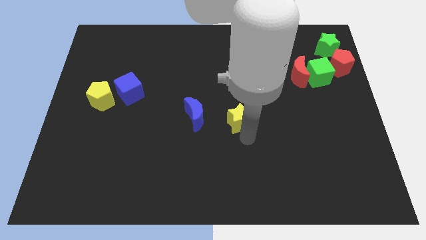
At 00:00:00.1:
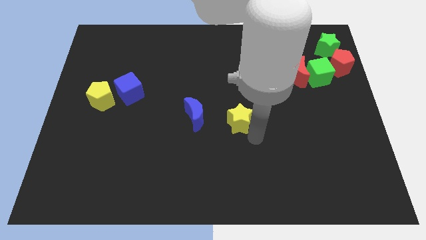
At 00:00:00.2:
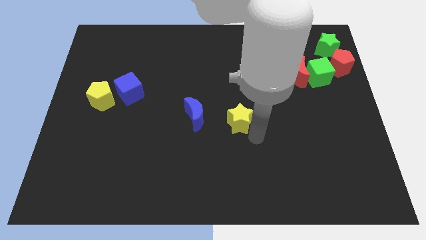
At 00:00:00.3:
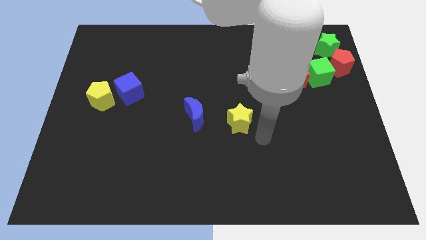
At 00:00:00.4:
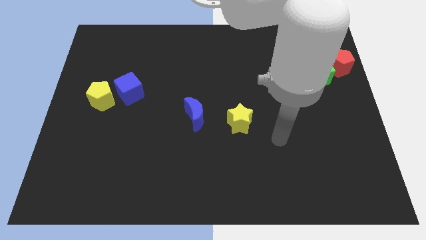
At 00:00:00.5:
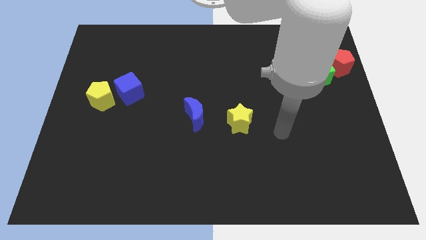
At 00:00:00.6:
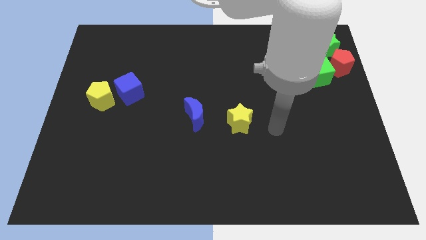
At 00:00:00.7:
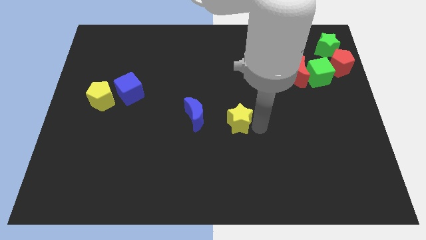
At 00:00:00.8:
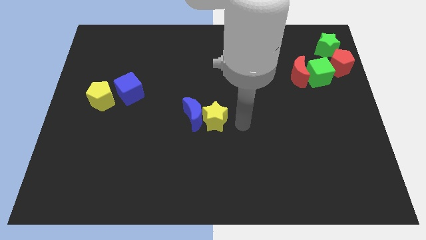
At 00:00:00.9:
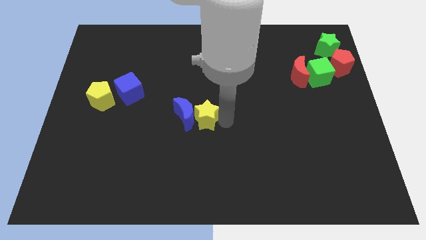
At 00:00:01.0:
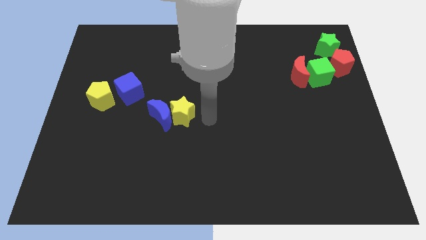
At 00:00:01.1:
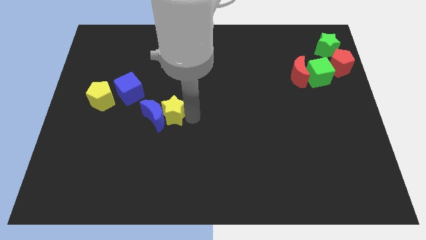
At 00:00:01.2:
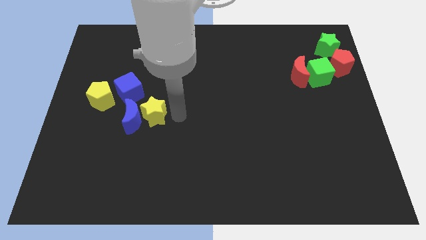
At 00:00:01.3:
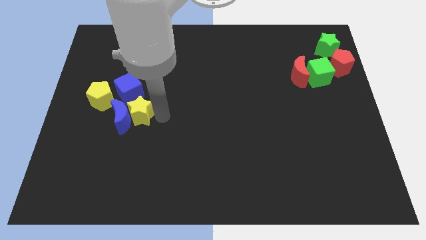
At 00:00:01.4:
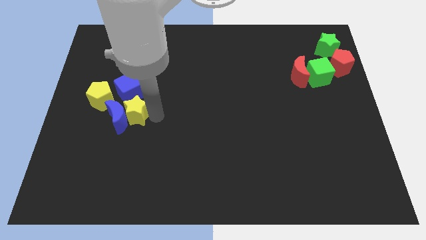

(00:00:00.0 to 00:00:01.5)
push the yellow star into the blue moon

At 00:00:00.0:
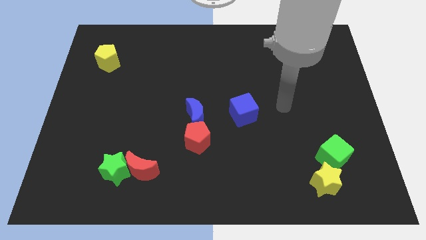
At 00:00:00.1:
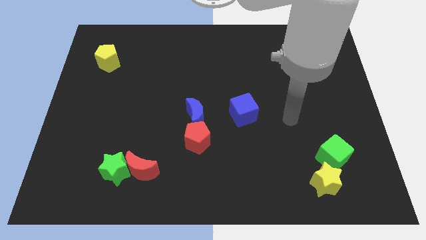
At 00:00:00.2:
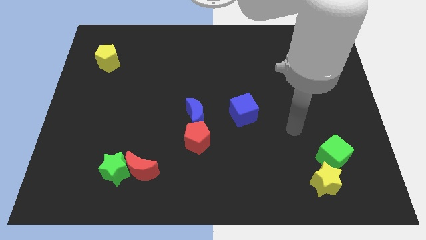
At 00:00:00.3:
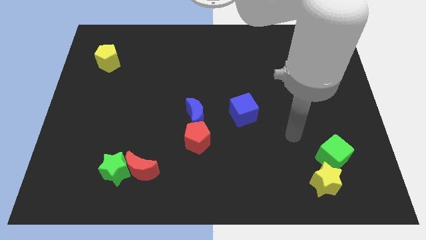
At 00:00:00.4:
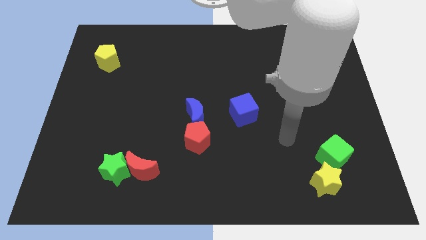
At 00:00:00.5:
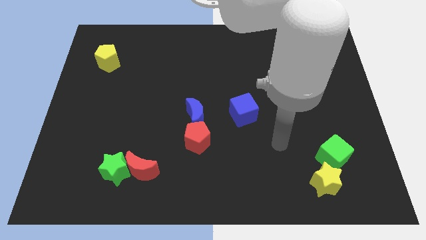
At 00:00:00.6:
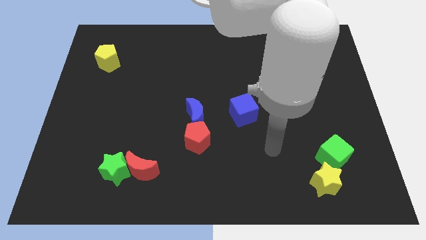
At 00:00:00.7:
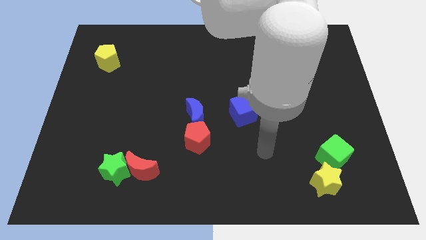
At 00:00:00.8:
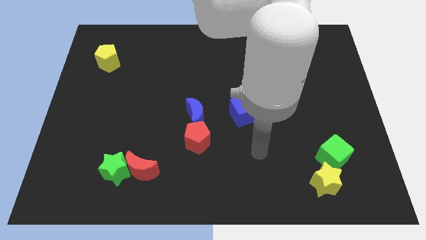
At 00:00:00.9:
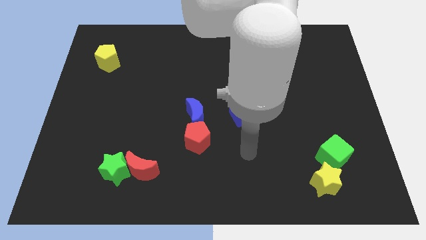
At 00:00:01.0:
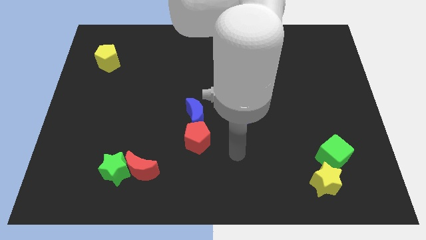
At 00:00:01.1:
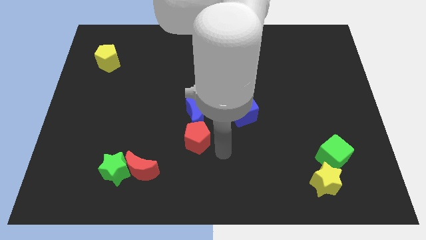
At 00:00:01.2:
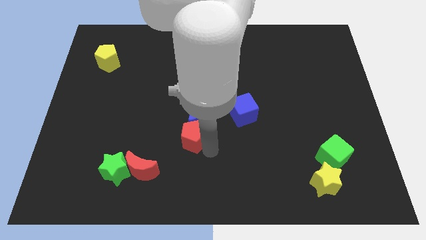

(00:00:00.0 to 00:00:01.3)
tap the bottom right of the red pentagon

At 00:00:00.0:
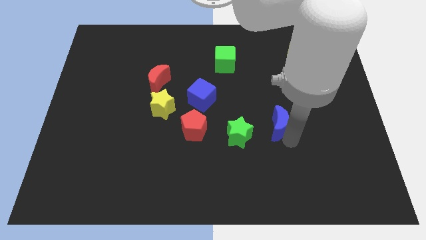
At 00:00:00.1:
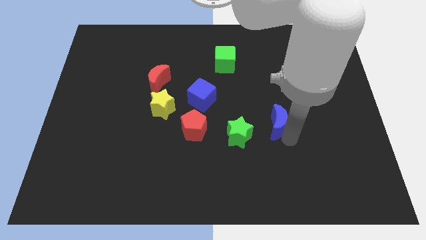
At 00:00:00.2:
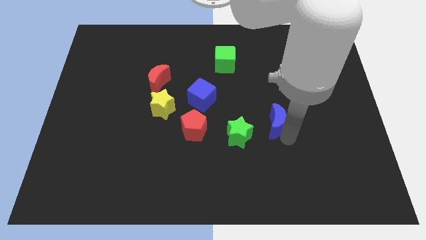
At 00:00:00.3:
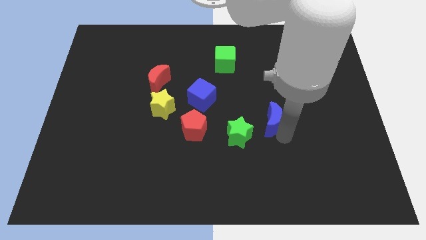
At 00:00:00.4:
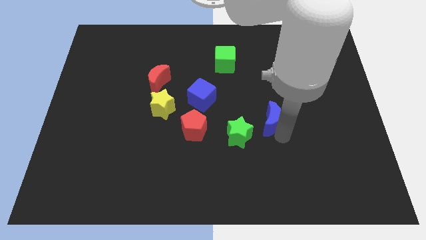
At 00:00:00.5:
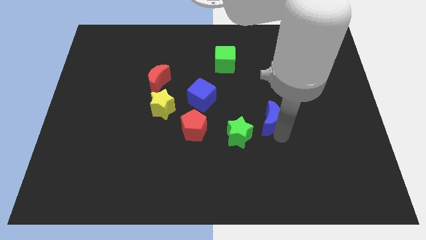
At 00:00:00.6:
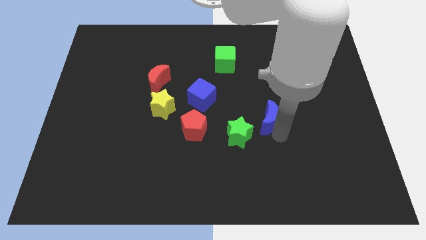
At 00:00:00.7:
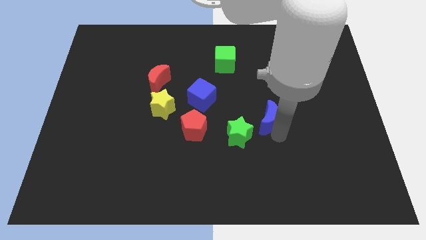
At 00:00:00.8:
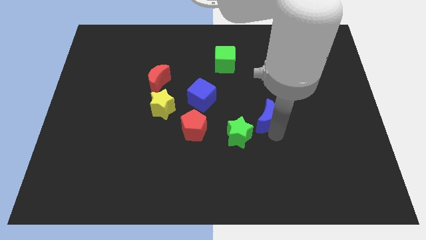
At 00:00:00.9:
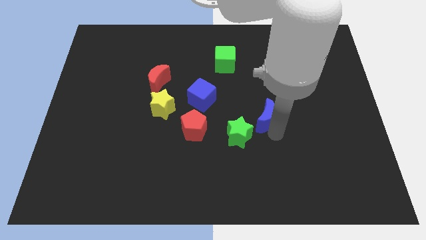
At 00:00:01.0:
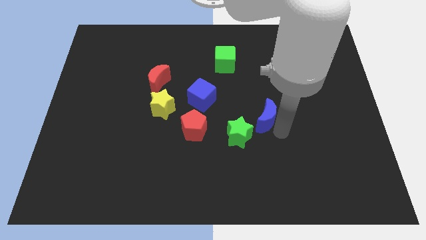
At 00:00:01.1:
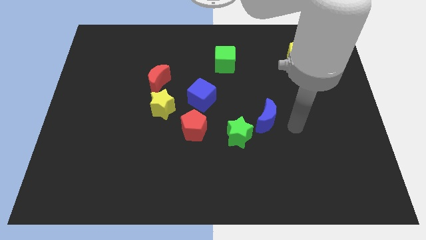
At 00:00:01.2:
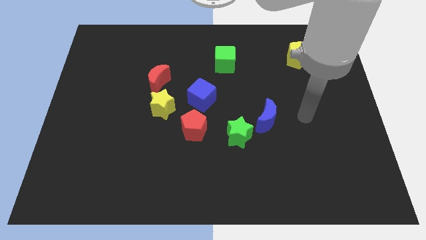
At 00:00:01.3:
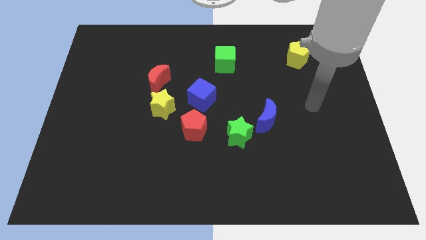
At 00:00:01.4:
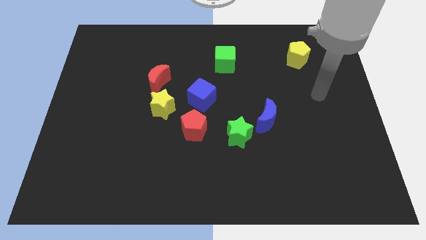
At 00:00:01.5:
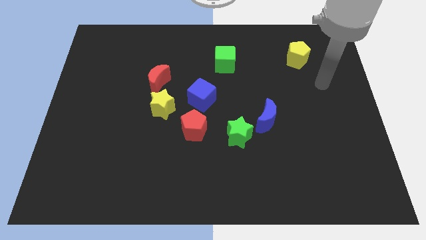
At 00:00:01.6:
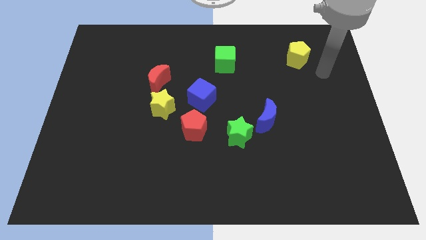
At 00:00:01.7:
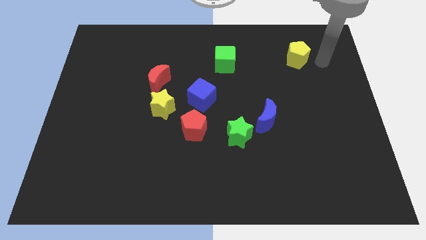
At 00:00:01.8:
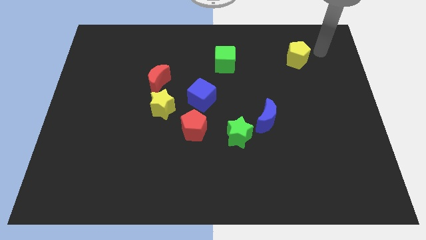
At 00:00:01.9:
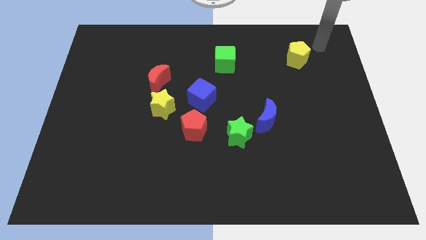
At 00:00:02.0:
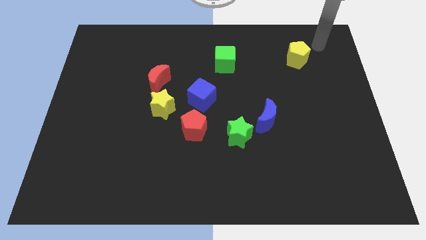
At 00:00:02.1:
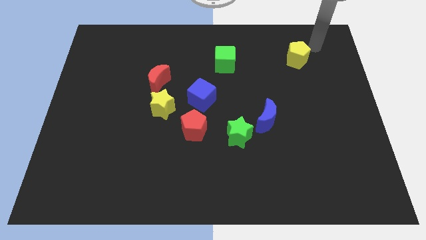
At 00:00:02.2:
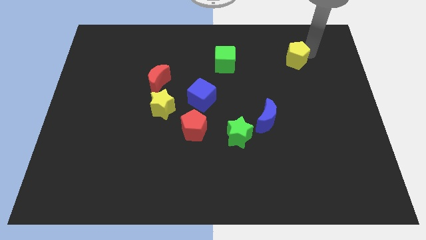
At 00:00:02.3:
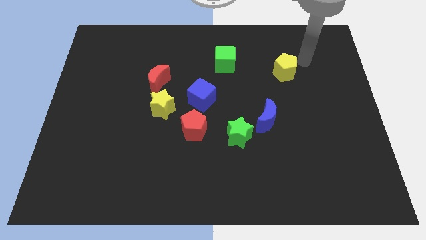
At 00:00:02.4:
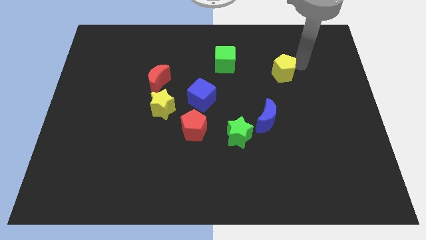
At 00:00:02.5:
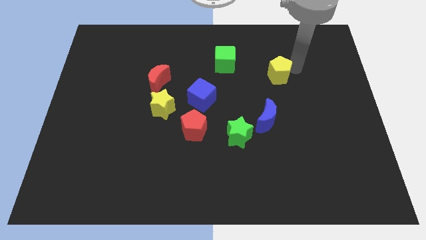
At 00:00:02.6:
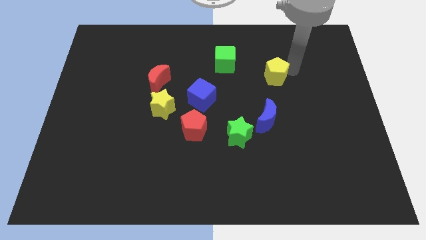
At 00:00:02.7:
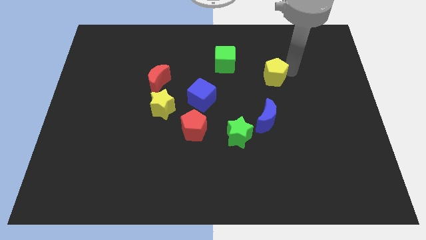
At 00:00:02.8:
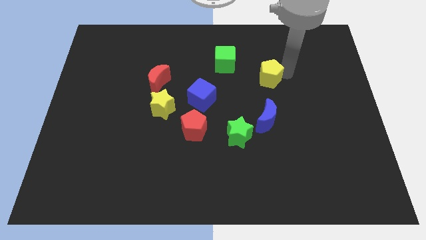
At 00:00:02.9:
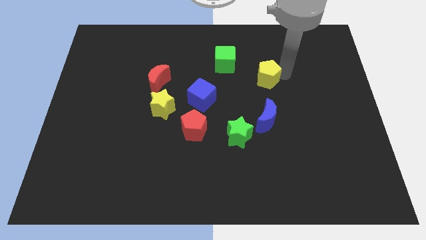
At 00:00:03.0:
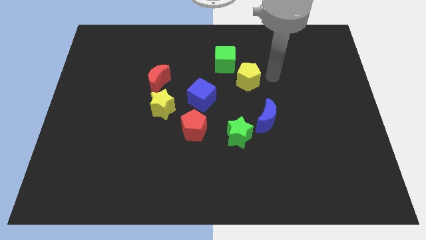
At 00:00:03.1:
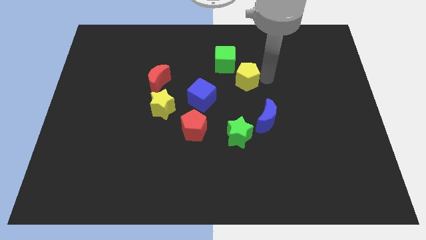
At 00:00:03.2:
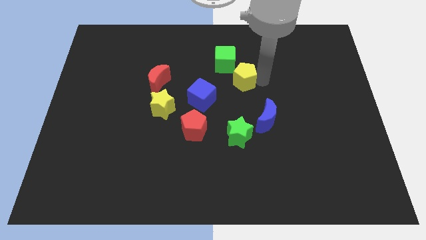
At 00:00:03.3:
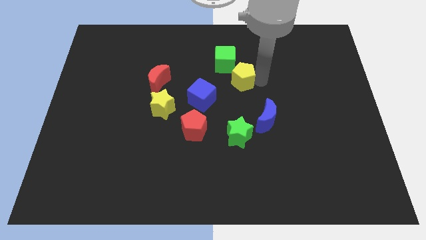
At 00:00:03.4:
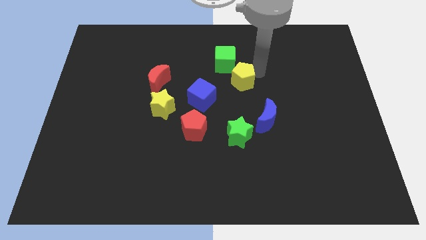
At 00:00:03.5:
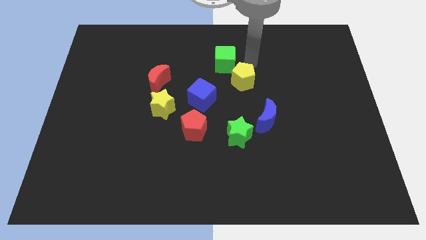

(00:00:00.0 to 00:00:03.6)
push the yellow pentagon diagonally top right to blue cube

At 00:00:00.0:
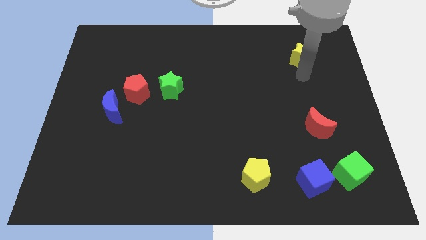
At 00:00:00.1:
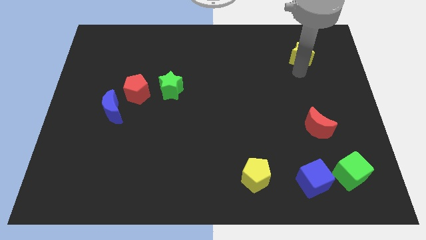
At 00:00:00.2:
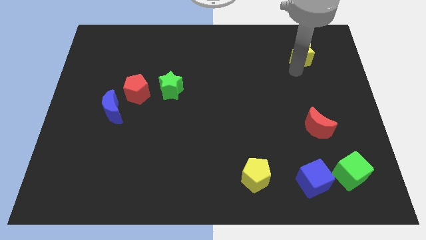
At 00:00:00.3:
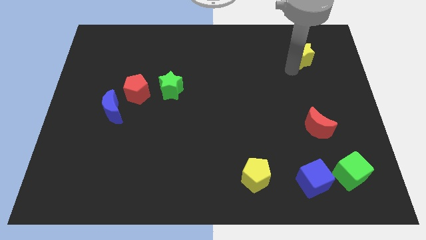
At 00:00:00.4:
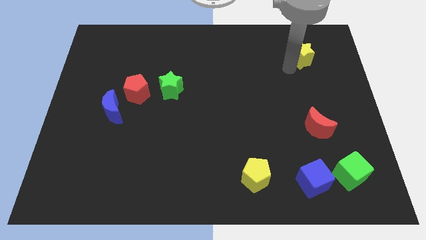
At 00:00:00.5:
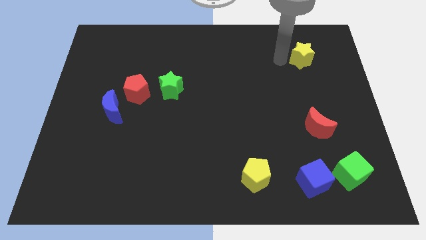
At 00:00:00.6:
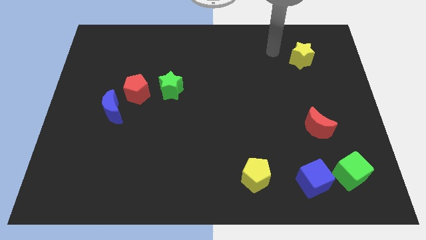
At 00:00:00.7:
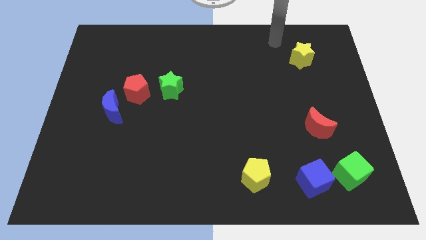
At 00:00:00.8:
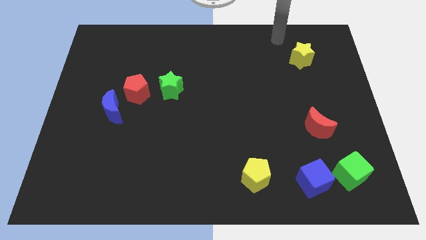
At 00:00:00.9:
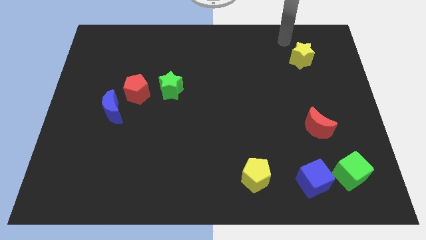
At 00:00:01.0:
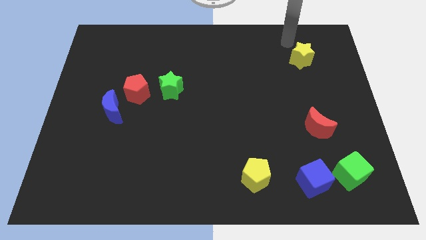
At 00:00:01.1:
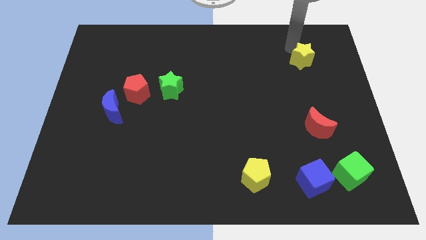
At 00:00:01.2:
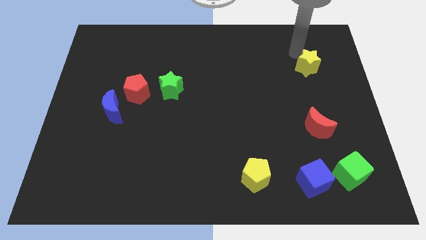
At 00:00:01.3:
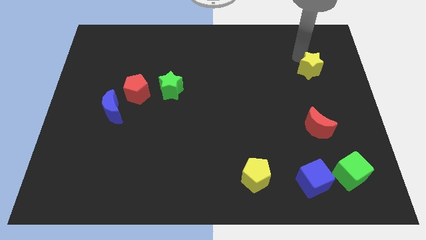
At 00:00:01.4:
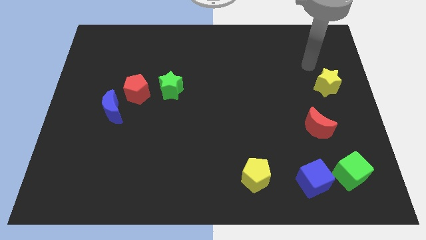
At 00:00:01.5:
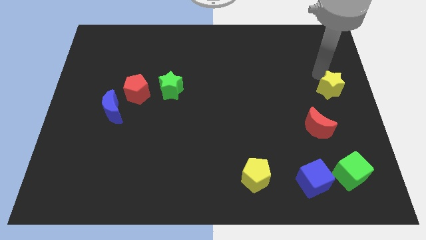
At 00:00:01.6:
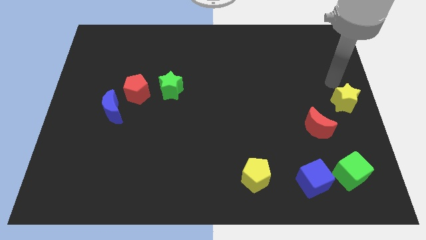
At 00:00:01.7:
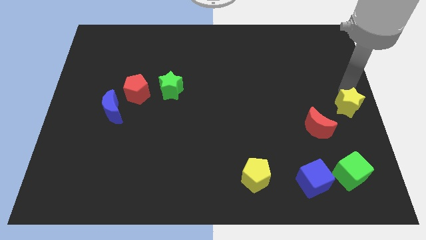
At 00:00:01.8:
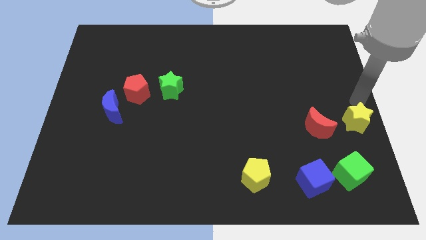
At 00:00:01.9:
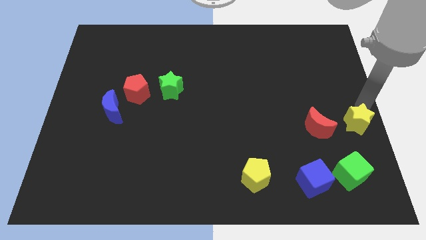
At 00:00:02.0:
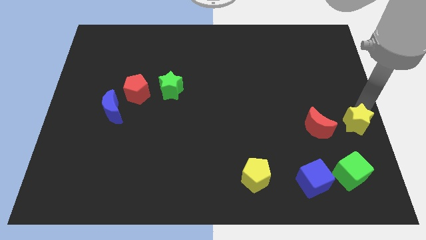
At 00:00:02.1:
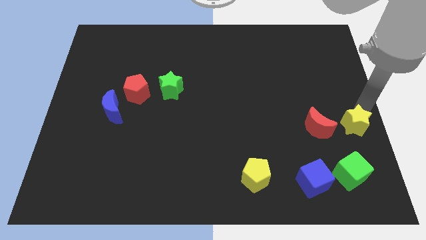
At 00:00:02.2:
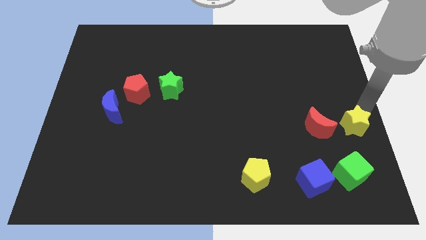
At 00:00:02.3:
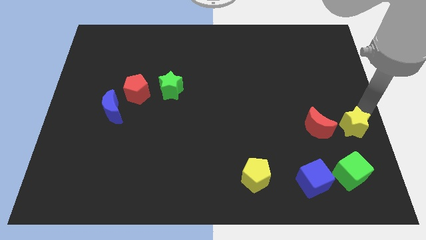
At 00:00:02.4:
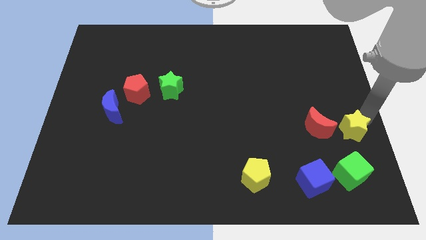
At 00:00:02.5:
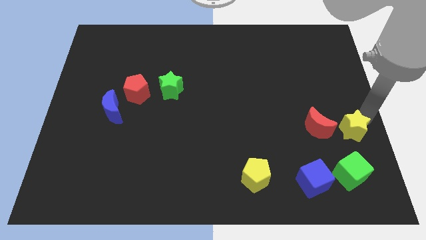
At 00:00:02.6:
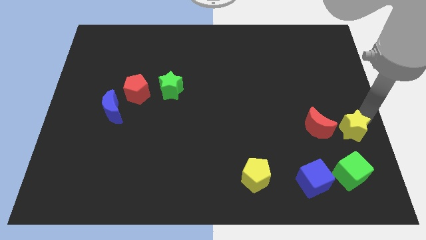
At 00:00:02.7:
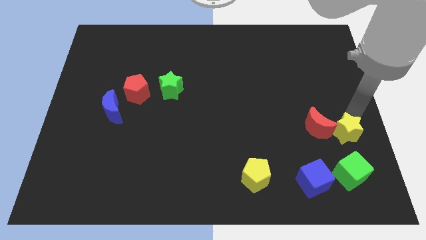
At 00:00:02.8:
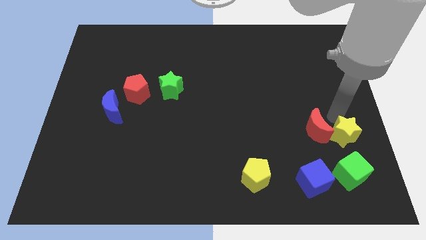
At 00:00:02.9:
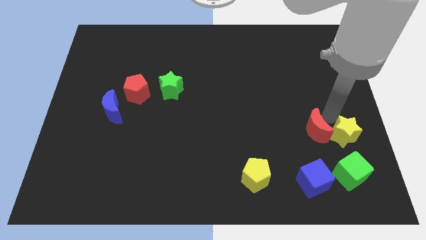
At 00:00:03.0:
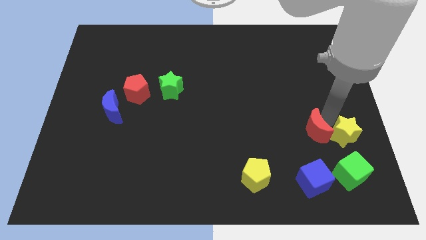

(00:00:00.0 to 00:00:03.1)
push the yellow star into the red moon
